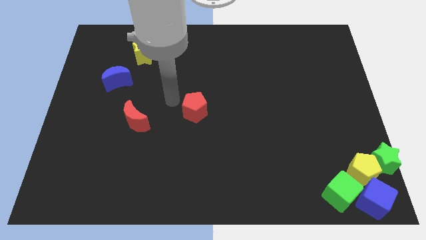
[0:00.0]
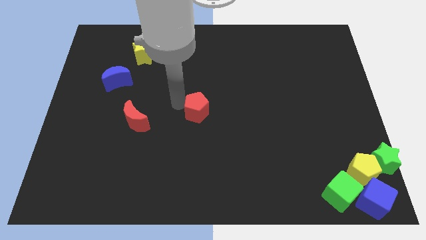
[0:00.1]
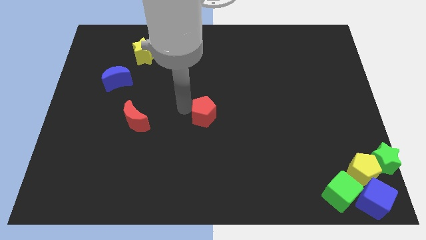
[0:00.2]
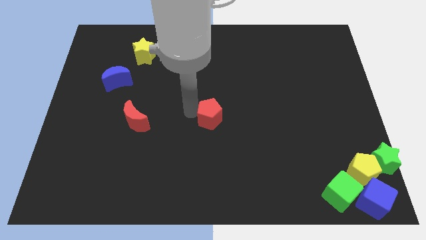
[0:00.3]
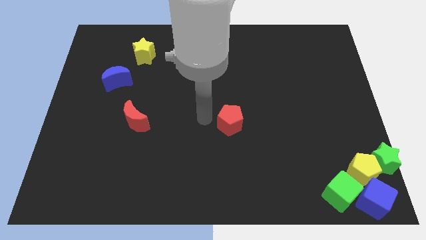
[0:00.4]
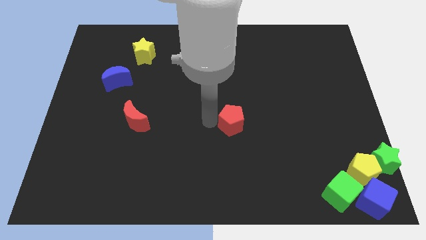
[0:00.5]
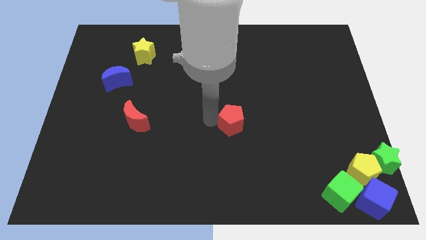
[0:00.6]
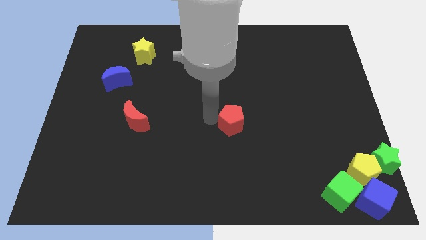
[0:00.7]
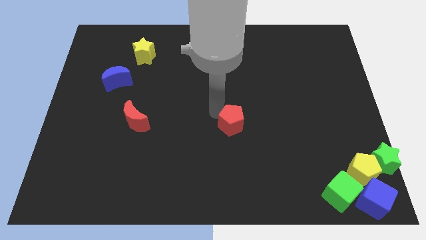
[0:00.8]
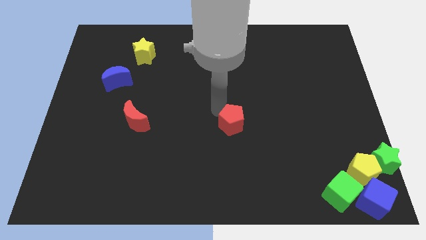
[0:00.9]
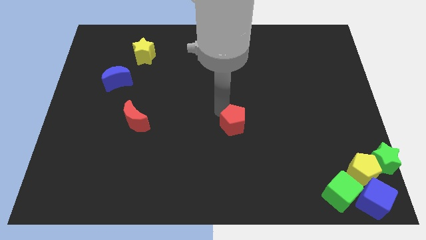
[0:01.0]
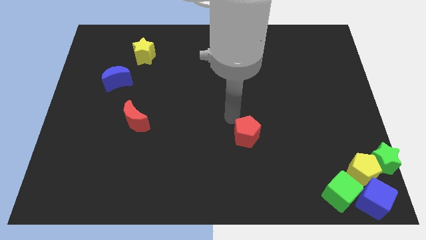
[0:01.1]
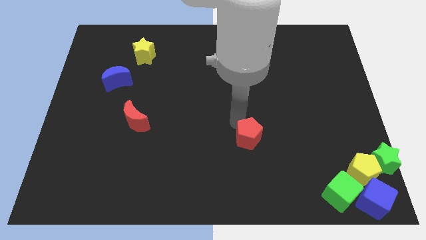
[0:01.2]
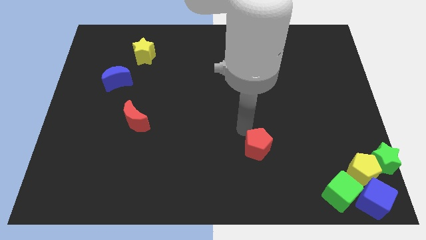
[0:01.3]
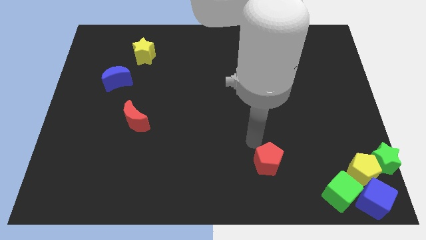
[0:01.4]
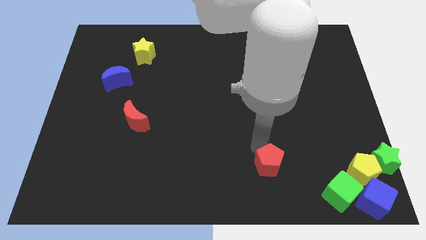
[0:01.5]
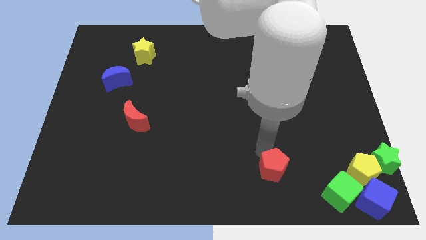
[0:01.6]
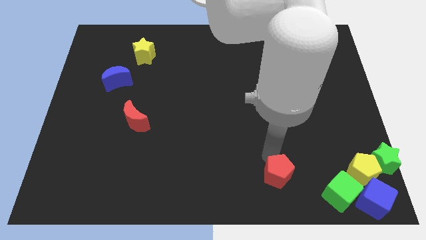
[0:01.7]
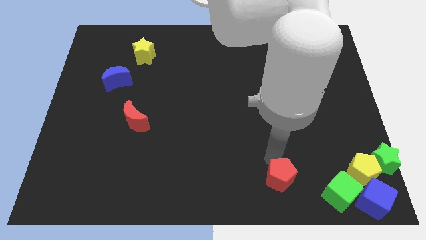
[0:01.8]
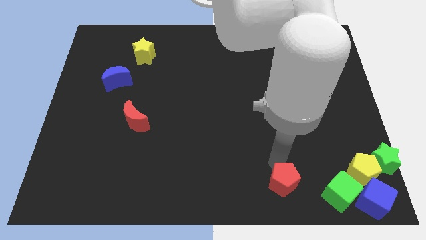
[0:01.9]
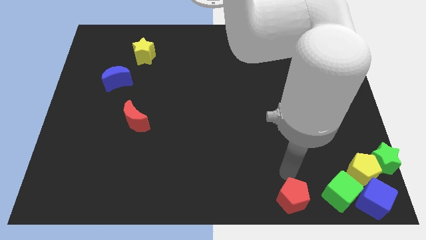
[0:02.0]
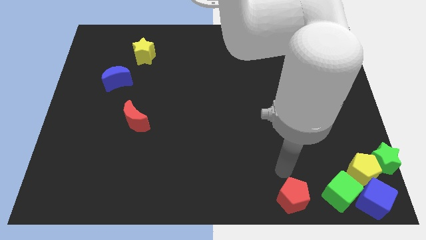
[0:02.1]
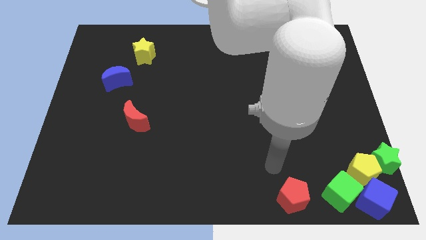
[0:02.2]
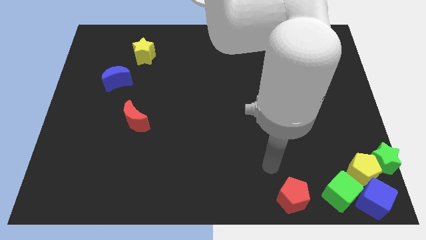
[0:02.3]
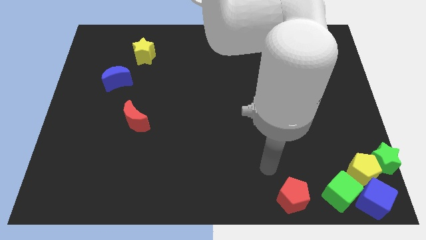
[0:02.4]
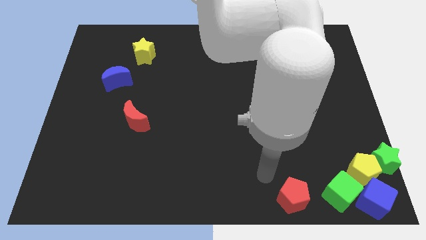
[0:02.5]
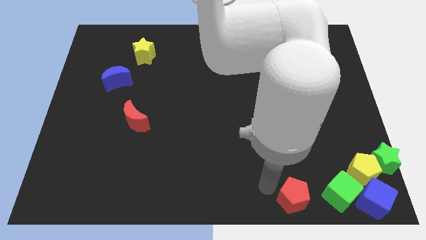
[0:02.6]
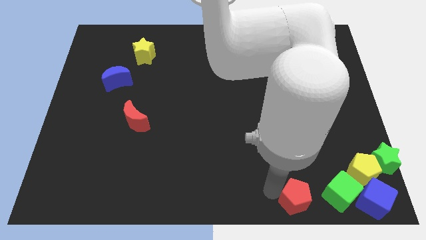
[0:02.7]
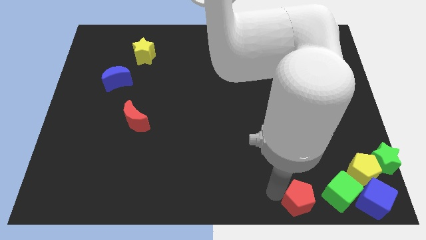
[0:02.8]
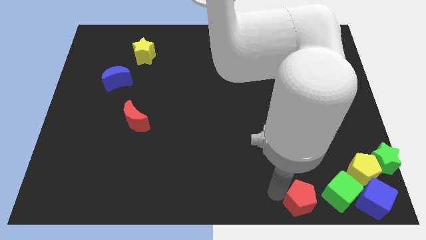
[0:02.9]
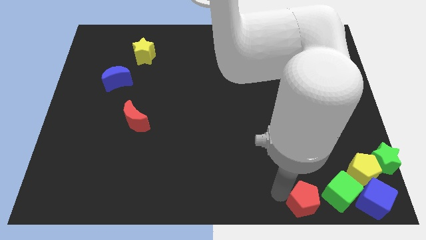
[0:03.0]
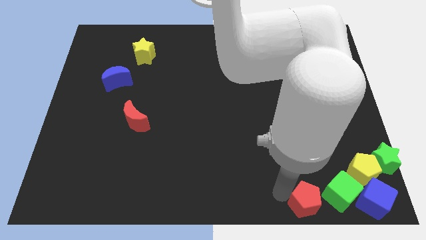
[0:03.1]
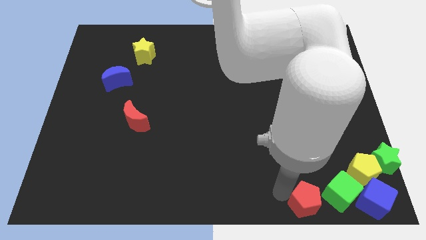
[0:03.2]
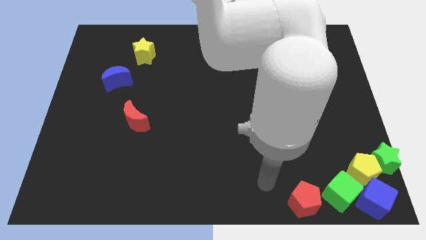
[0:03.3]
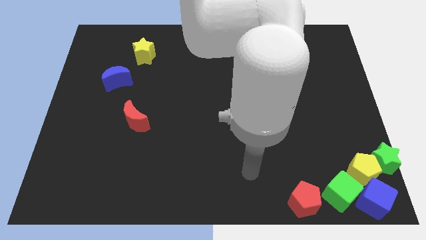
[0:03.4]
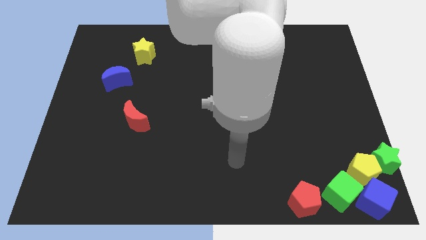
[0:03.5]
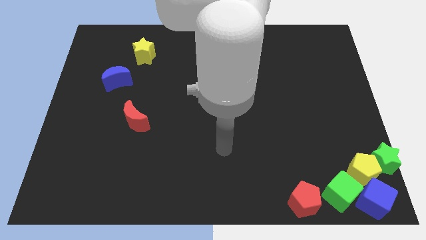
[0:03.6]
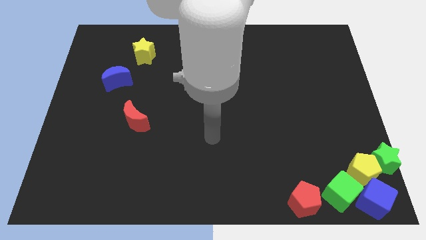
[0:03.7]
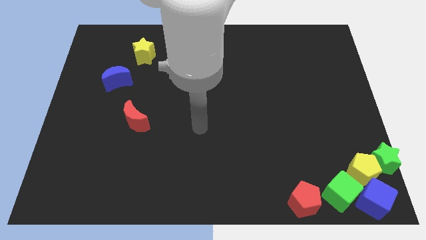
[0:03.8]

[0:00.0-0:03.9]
push the red pentagon to the group of blocks

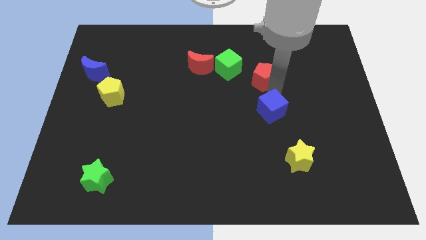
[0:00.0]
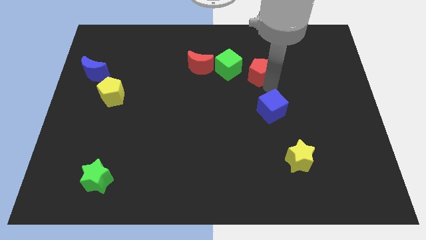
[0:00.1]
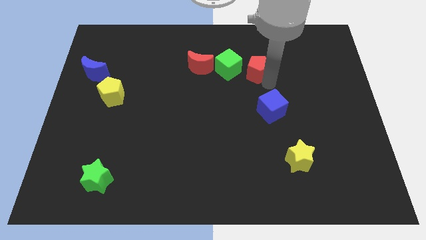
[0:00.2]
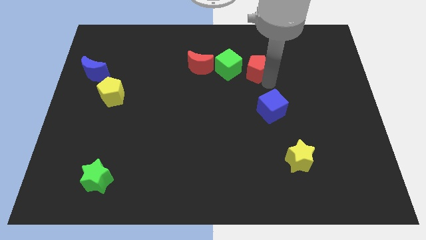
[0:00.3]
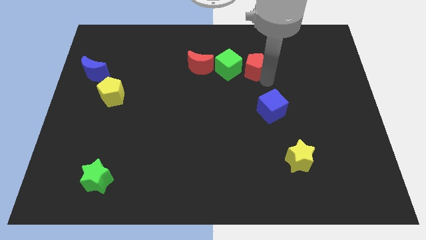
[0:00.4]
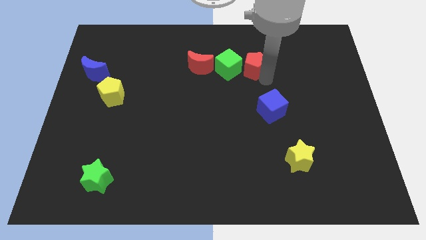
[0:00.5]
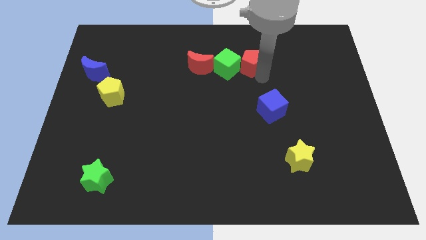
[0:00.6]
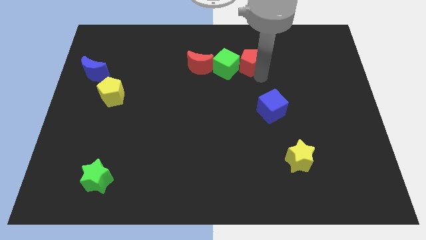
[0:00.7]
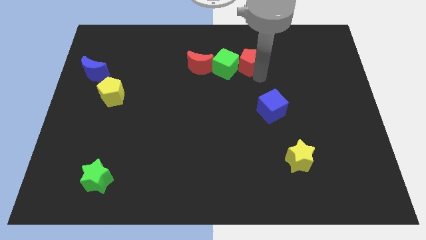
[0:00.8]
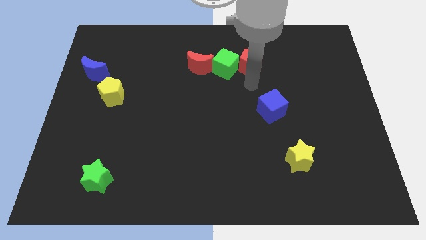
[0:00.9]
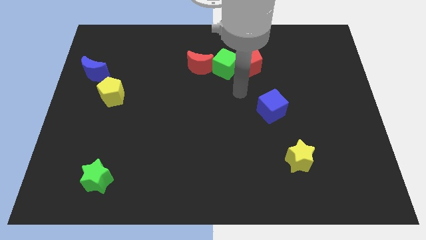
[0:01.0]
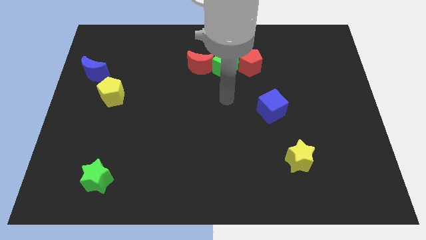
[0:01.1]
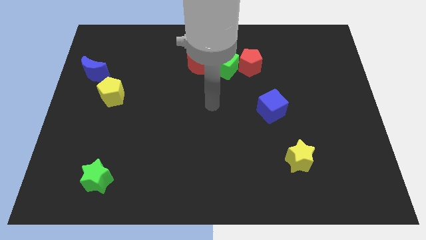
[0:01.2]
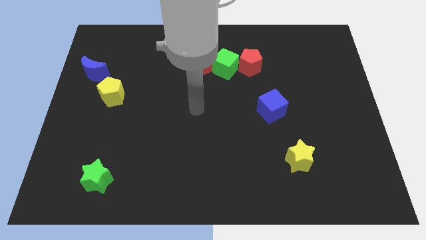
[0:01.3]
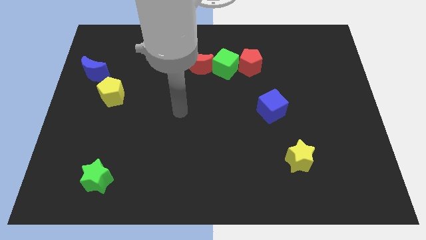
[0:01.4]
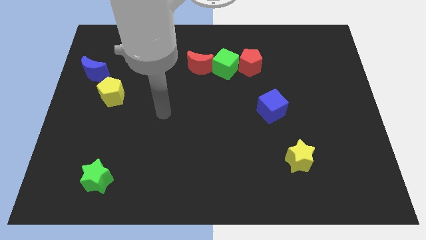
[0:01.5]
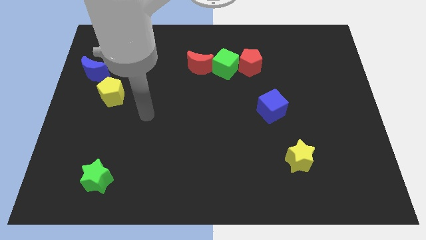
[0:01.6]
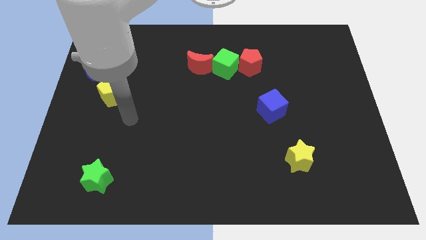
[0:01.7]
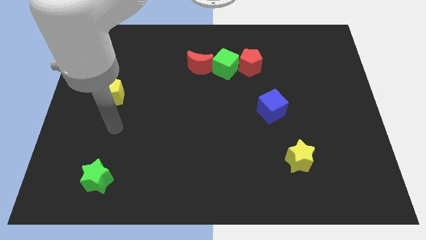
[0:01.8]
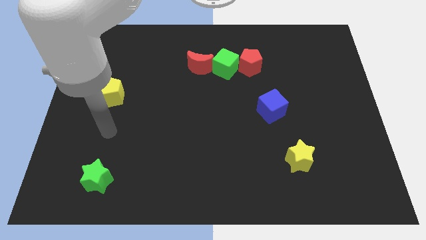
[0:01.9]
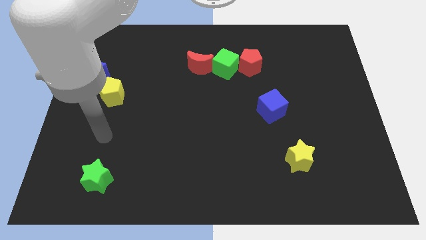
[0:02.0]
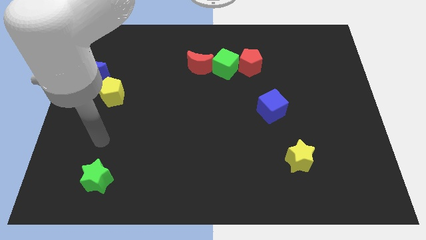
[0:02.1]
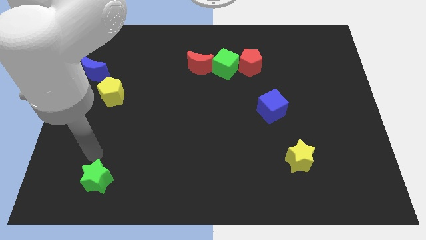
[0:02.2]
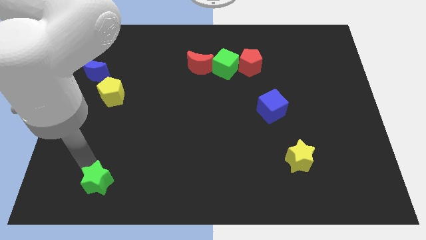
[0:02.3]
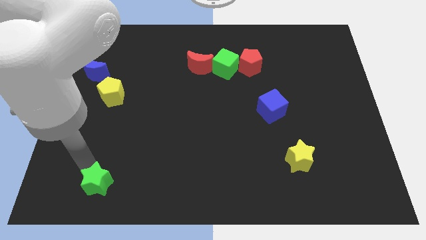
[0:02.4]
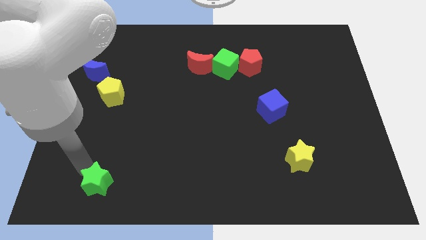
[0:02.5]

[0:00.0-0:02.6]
place the arm above the green star

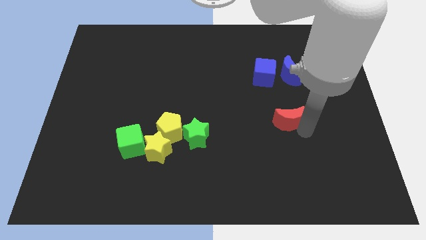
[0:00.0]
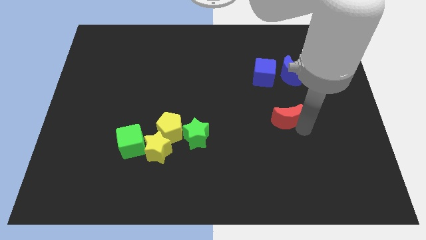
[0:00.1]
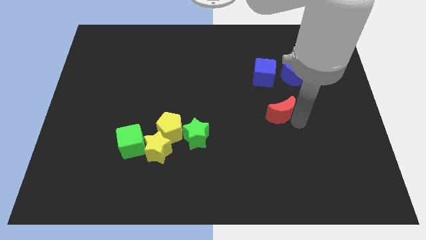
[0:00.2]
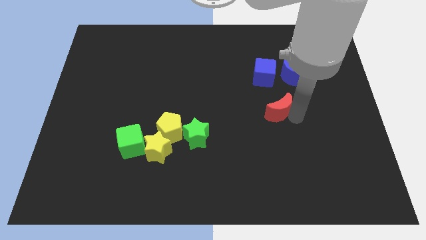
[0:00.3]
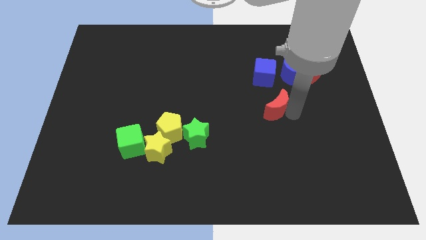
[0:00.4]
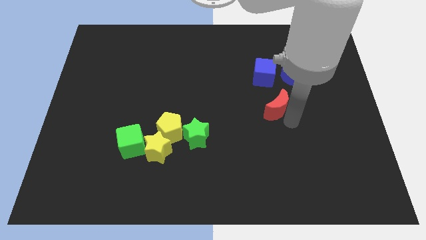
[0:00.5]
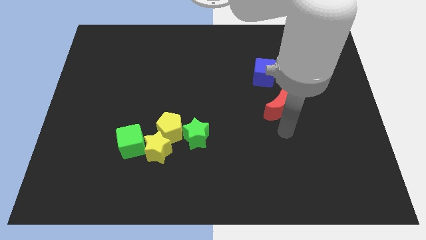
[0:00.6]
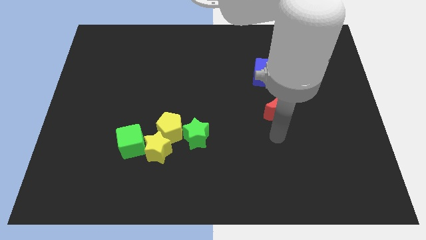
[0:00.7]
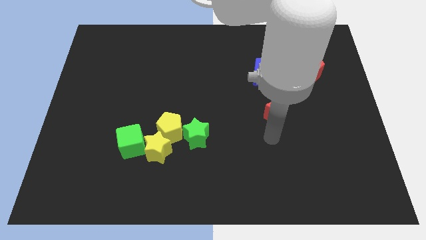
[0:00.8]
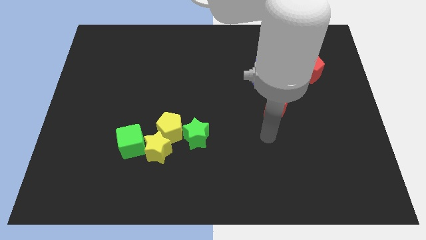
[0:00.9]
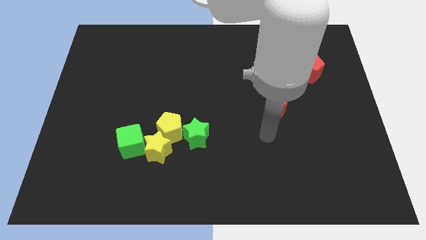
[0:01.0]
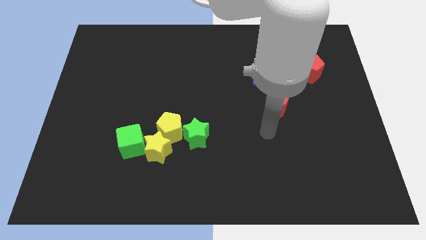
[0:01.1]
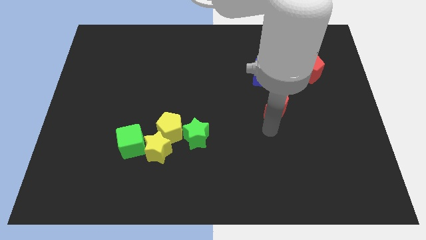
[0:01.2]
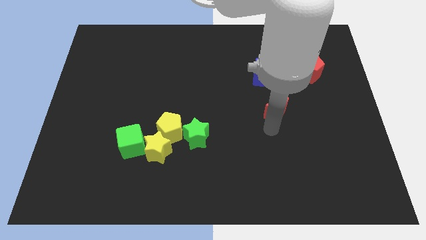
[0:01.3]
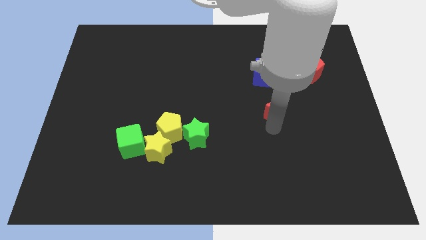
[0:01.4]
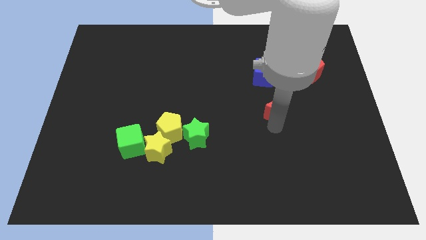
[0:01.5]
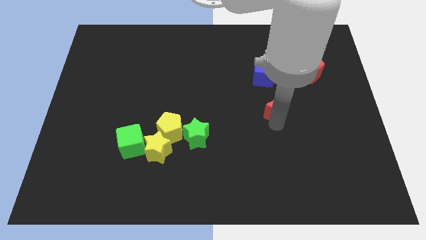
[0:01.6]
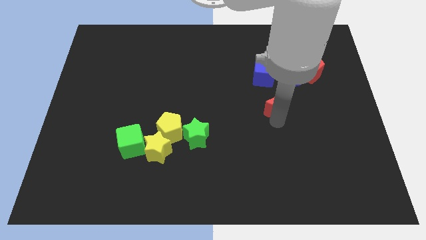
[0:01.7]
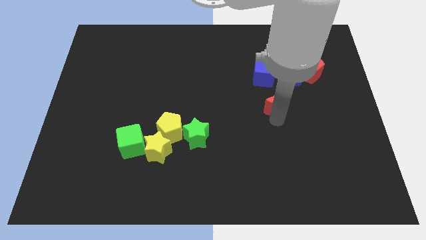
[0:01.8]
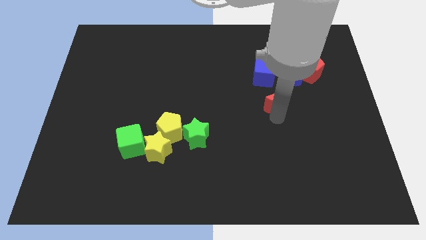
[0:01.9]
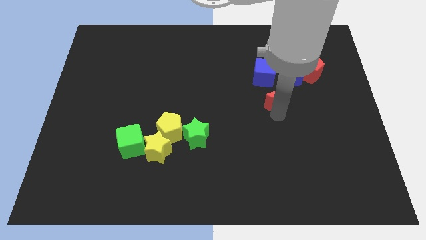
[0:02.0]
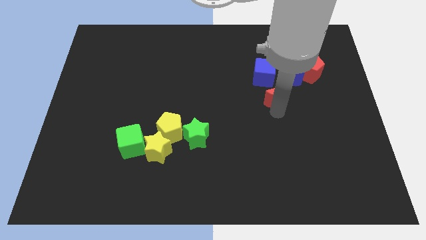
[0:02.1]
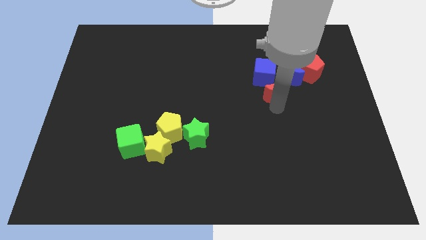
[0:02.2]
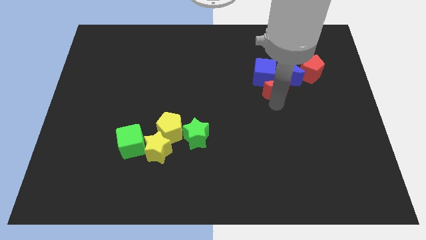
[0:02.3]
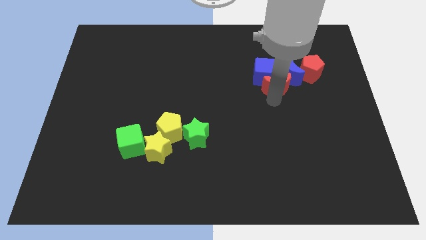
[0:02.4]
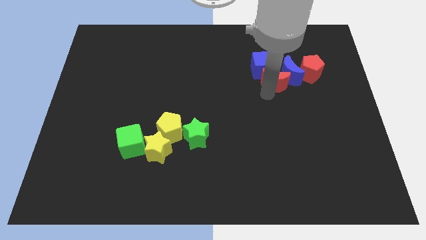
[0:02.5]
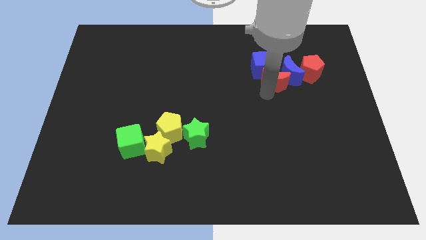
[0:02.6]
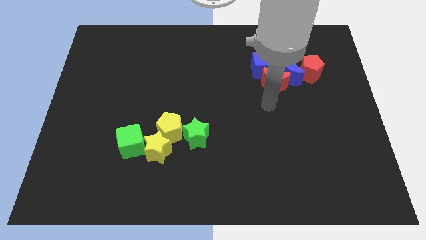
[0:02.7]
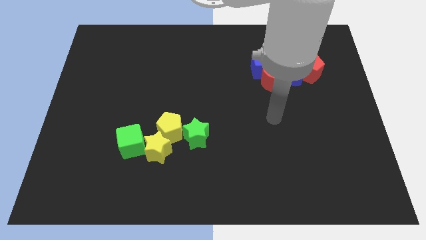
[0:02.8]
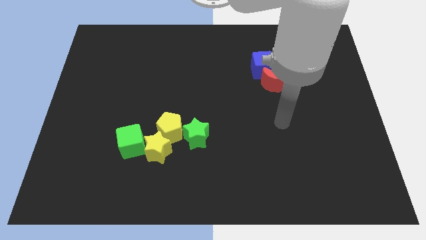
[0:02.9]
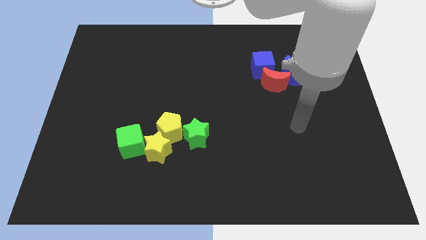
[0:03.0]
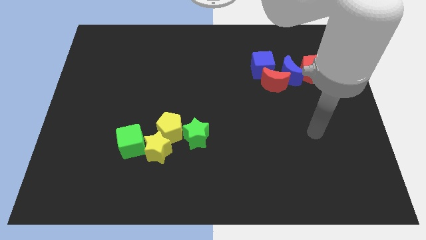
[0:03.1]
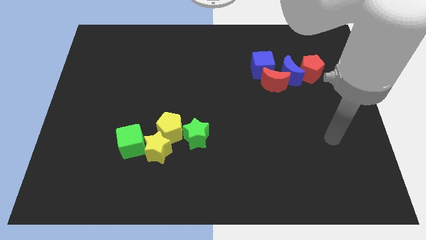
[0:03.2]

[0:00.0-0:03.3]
push the red moon near to the blue cube and blue moon
